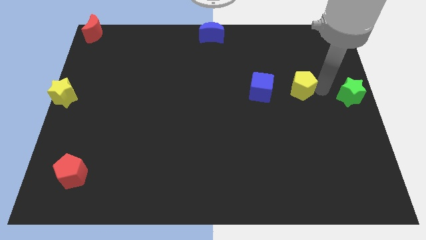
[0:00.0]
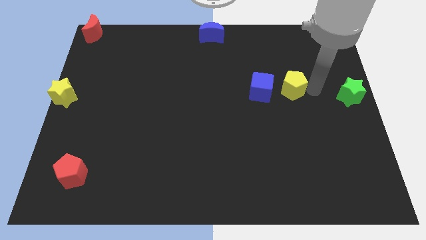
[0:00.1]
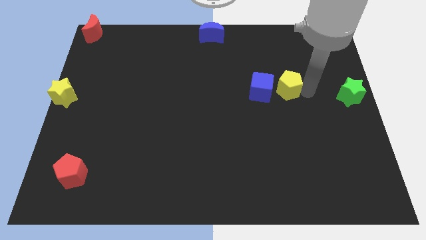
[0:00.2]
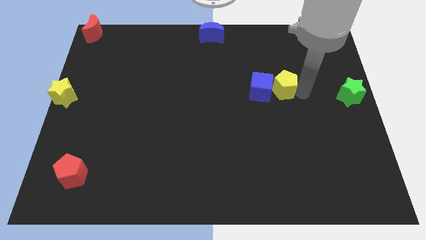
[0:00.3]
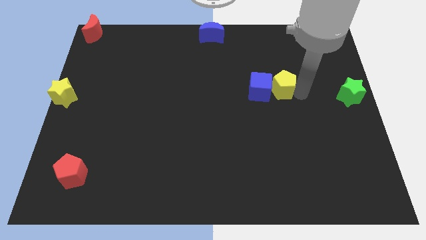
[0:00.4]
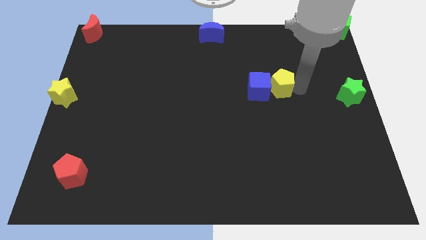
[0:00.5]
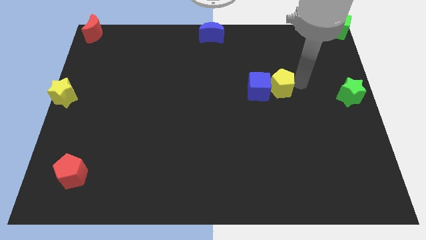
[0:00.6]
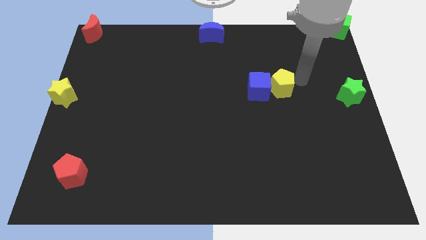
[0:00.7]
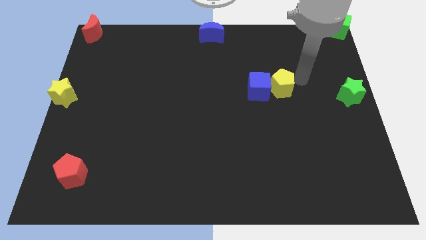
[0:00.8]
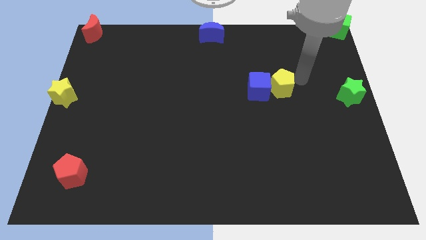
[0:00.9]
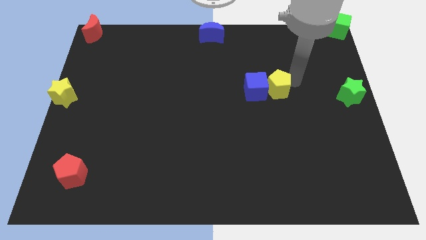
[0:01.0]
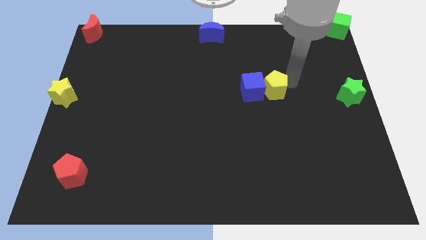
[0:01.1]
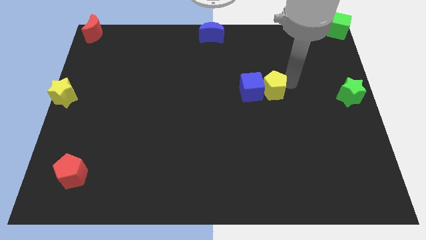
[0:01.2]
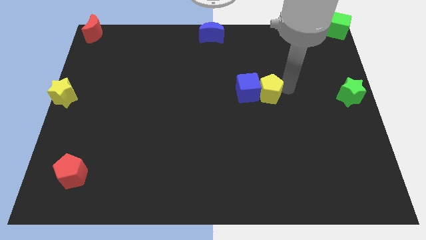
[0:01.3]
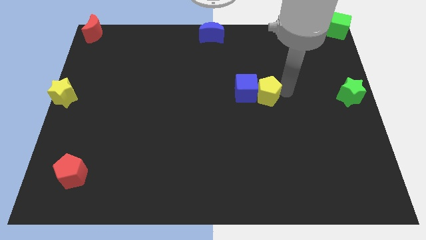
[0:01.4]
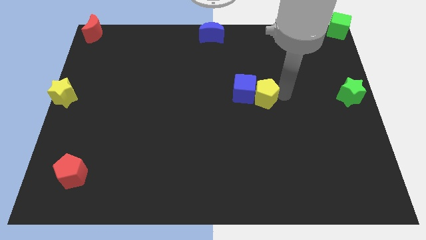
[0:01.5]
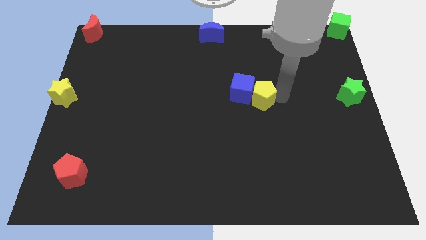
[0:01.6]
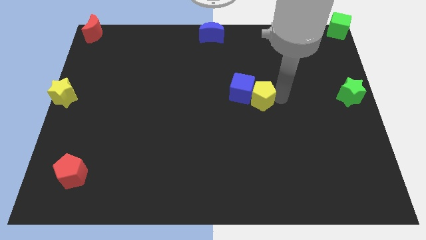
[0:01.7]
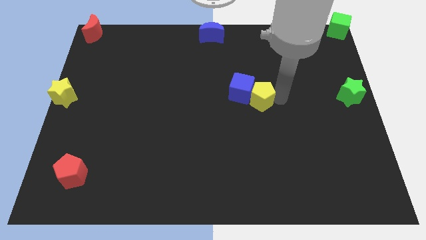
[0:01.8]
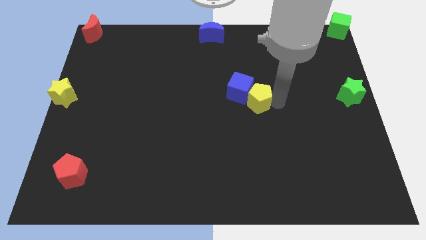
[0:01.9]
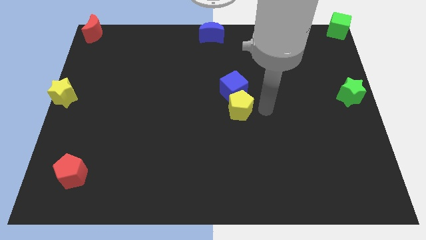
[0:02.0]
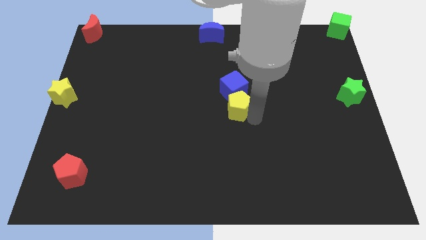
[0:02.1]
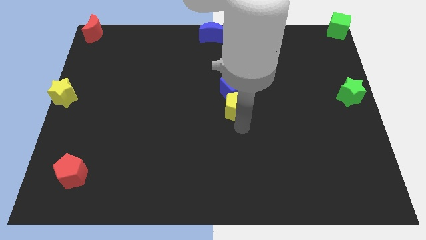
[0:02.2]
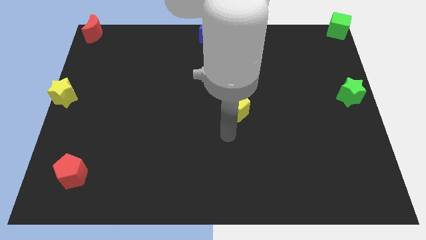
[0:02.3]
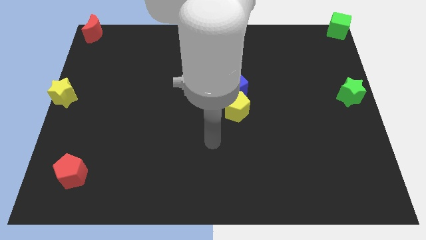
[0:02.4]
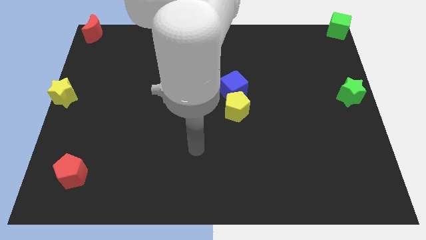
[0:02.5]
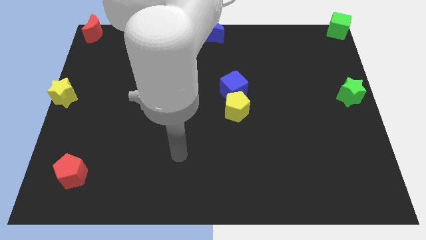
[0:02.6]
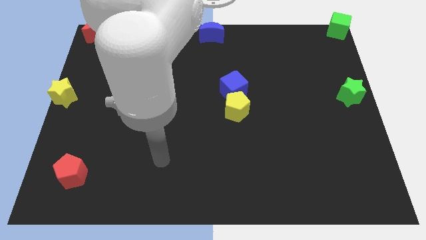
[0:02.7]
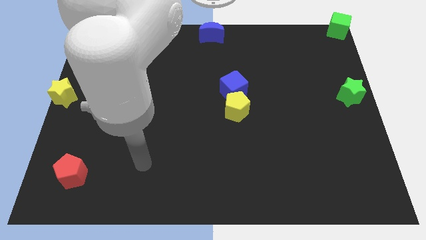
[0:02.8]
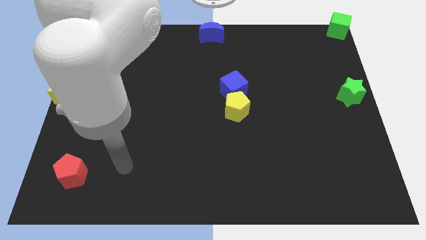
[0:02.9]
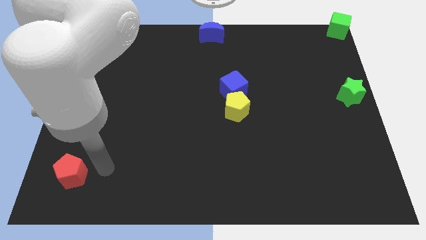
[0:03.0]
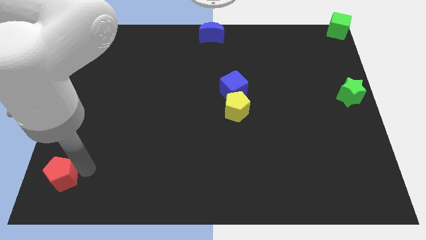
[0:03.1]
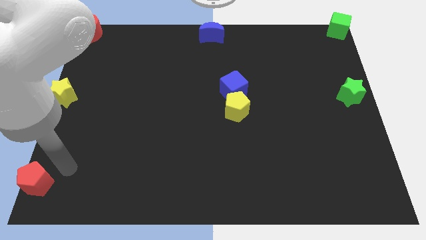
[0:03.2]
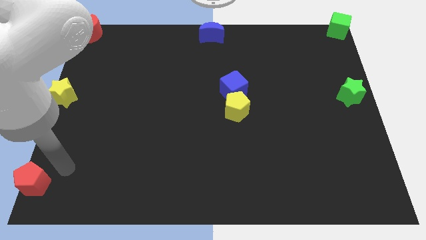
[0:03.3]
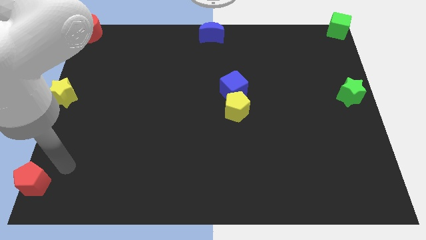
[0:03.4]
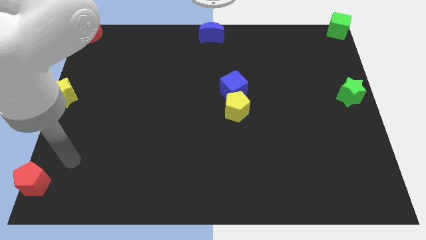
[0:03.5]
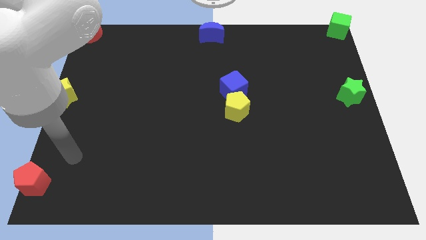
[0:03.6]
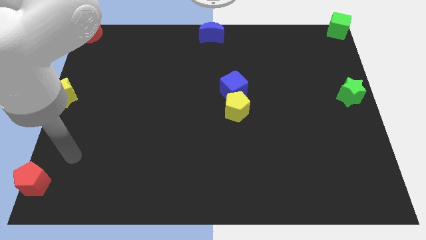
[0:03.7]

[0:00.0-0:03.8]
slide the red pentagon towards the bottom left corner of the board

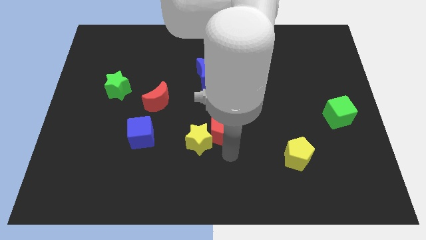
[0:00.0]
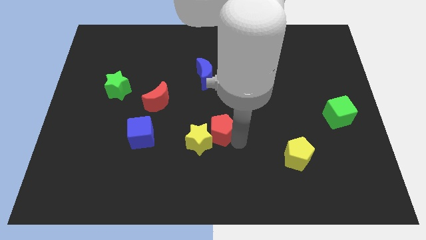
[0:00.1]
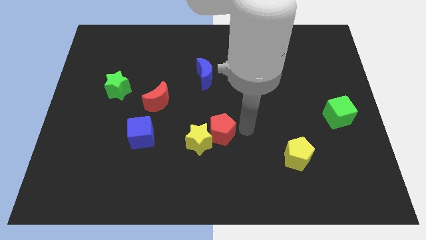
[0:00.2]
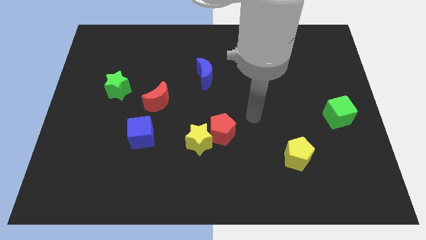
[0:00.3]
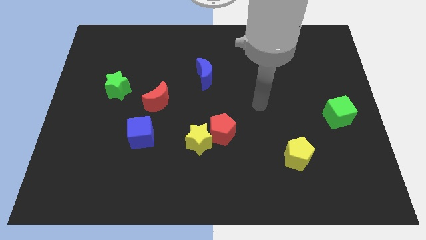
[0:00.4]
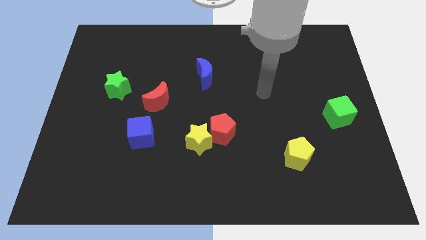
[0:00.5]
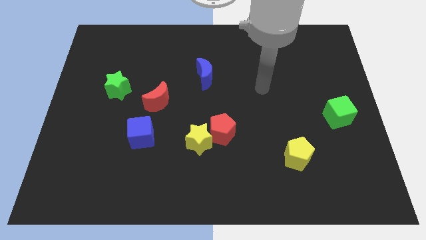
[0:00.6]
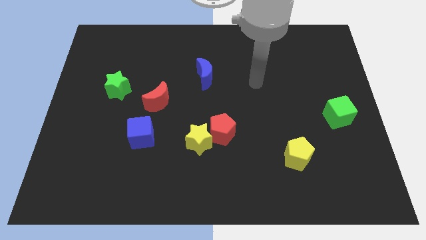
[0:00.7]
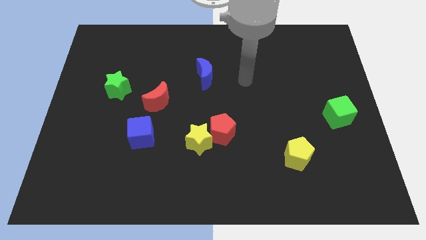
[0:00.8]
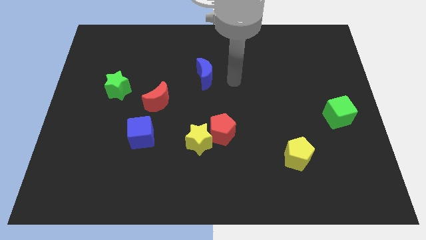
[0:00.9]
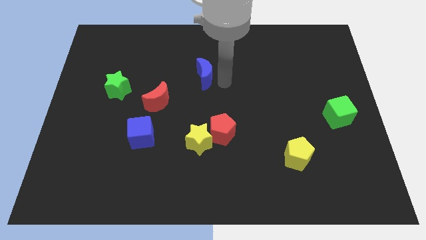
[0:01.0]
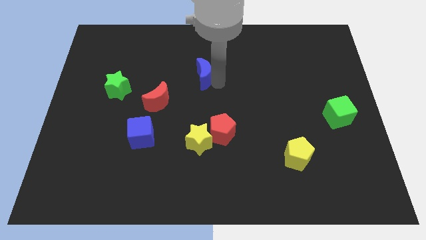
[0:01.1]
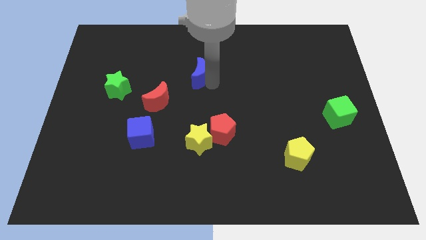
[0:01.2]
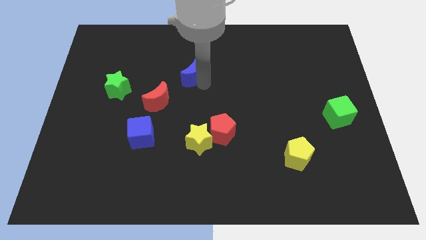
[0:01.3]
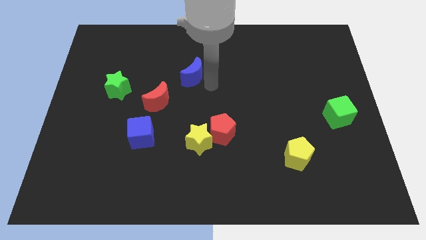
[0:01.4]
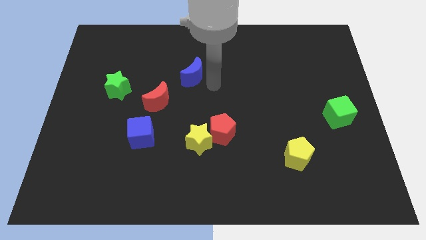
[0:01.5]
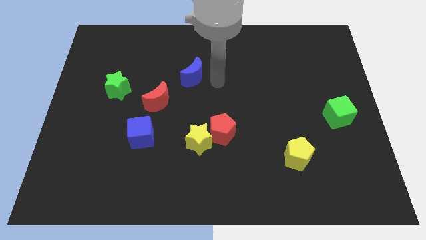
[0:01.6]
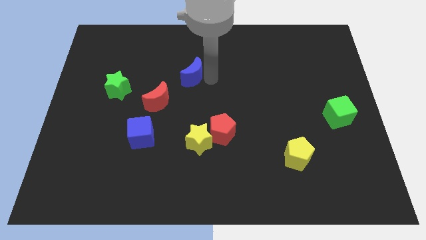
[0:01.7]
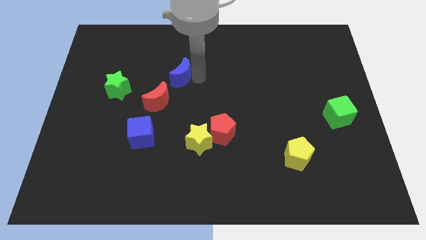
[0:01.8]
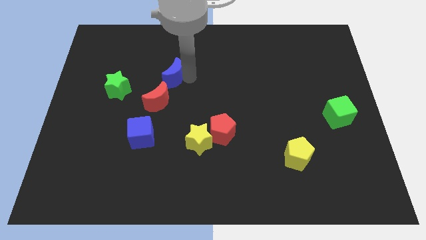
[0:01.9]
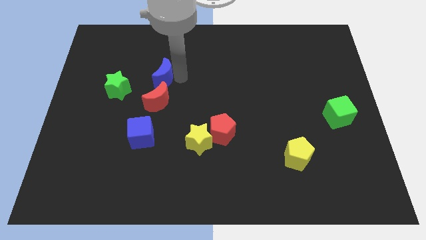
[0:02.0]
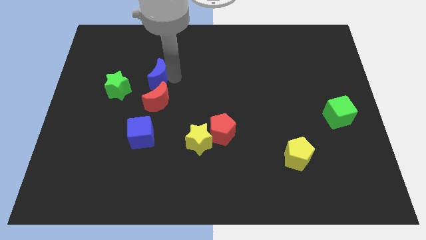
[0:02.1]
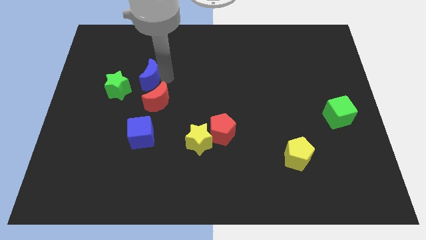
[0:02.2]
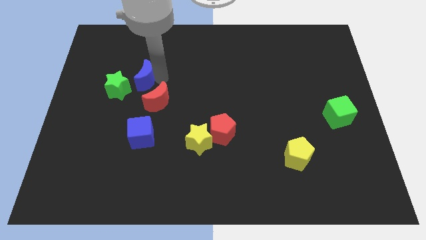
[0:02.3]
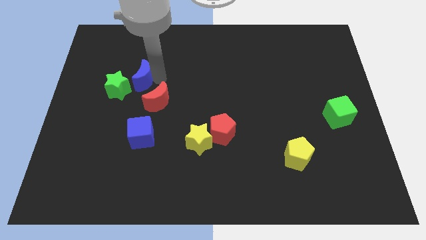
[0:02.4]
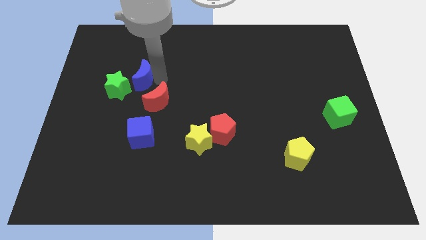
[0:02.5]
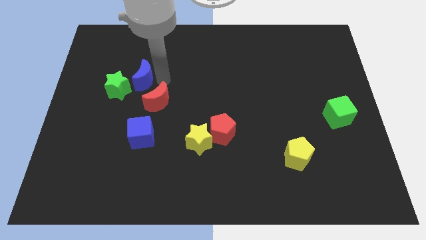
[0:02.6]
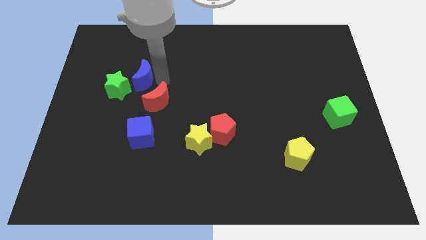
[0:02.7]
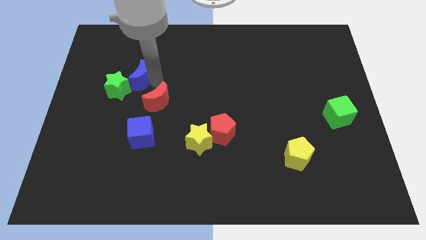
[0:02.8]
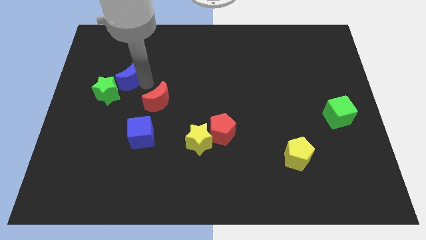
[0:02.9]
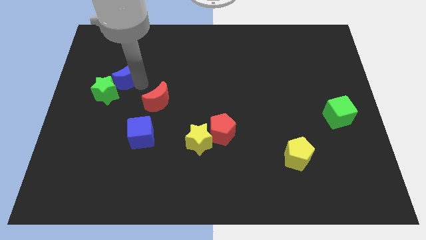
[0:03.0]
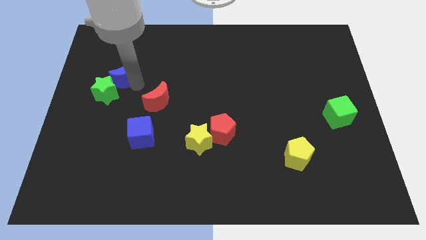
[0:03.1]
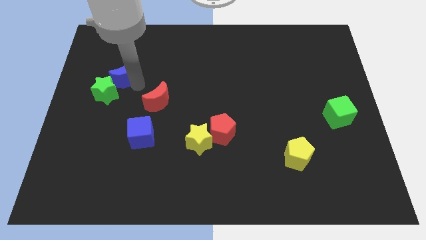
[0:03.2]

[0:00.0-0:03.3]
push the blue moon into the green star

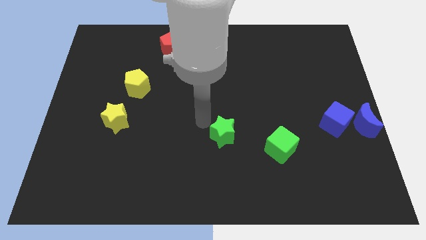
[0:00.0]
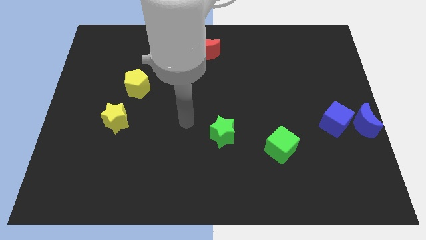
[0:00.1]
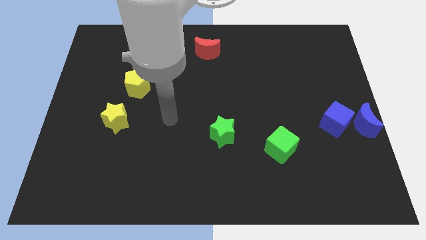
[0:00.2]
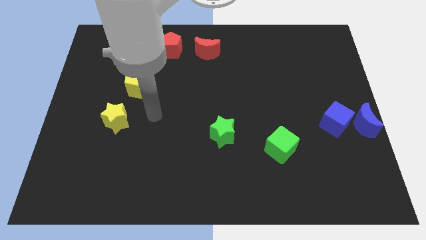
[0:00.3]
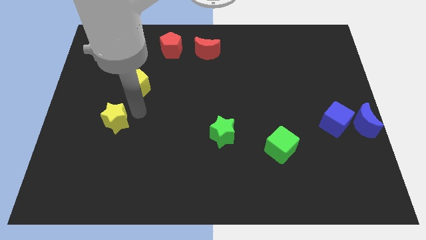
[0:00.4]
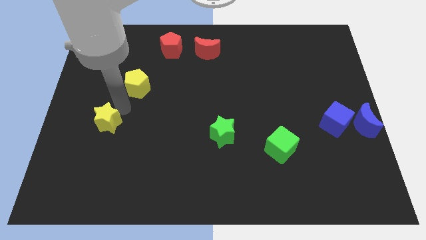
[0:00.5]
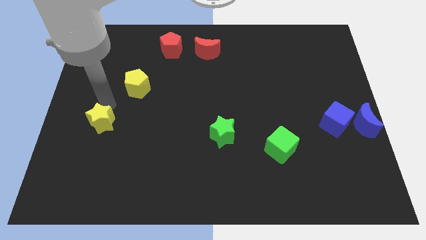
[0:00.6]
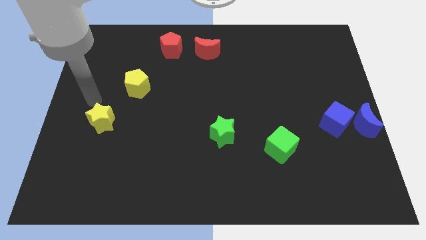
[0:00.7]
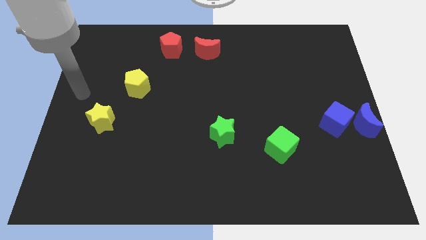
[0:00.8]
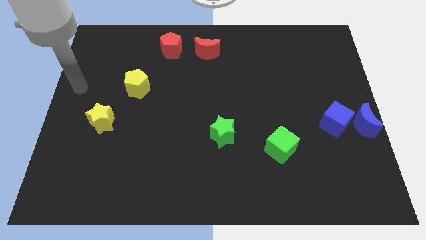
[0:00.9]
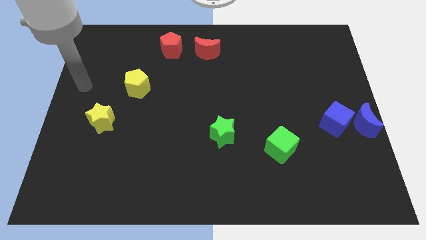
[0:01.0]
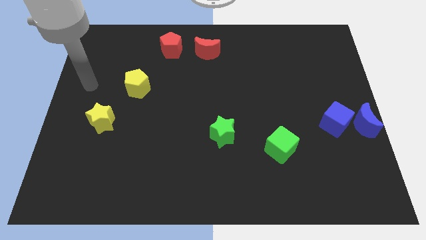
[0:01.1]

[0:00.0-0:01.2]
move the yellow star slightly to the left

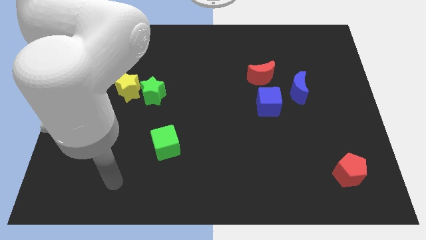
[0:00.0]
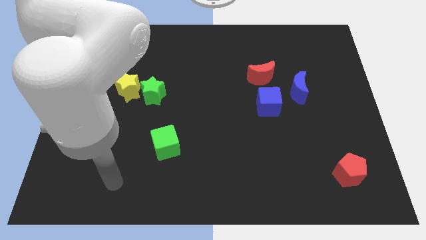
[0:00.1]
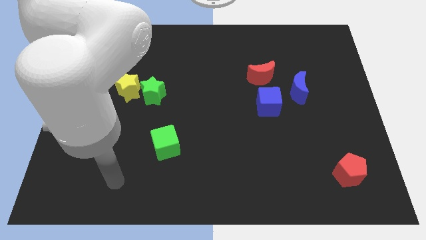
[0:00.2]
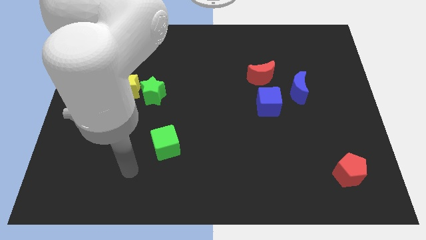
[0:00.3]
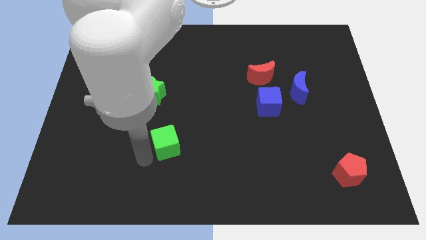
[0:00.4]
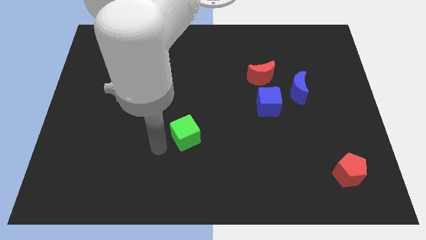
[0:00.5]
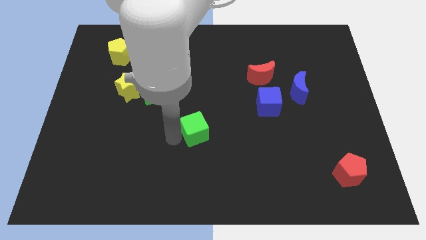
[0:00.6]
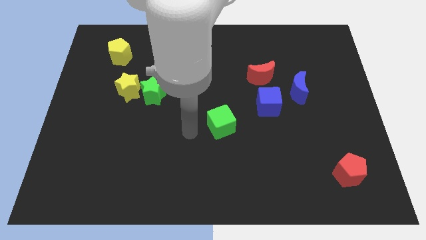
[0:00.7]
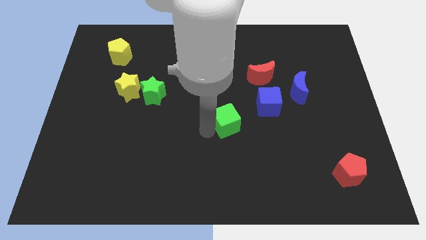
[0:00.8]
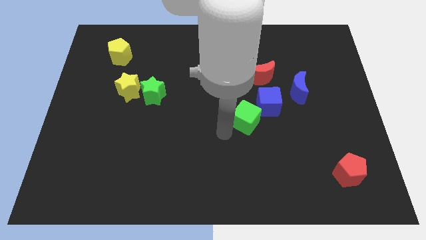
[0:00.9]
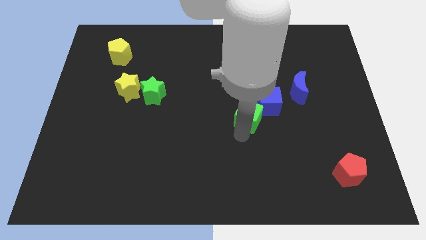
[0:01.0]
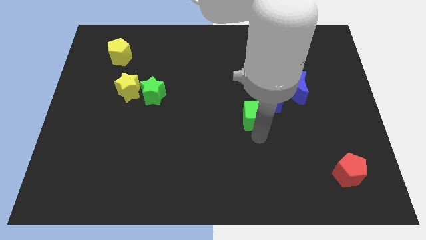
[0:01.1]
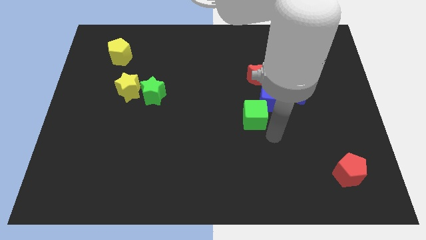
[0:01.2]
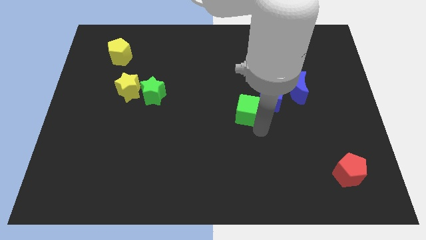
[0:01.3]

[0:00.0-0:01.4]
move green cube into the blue cube
